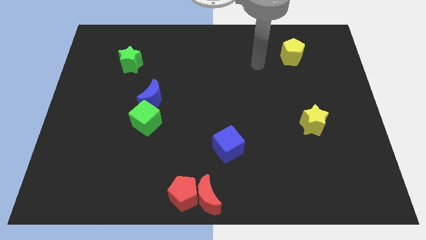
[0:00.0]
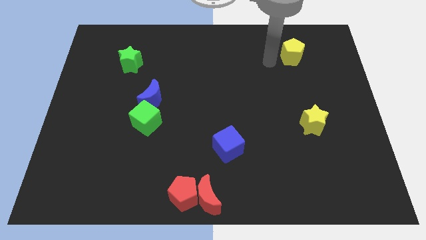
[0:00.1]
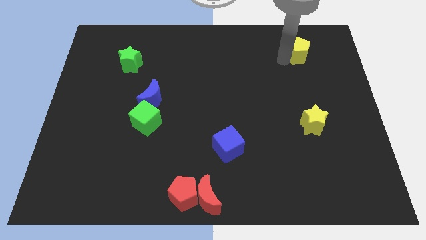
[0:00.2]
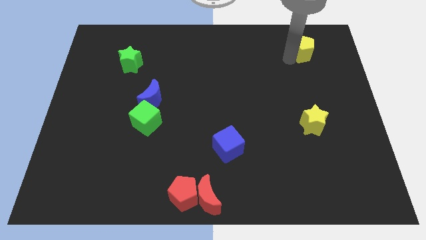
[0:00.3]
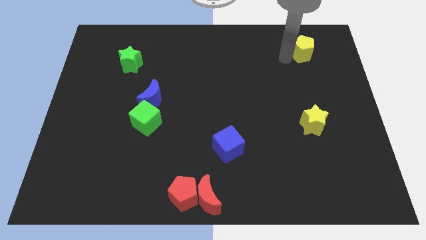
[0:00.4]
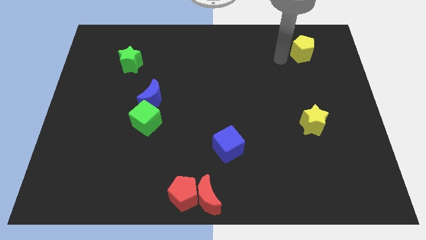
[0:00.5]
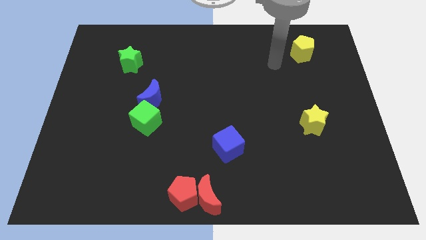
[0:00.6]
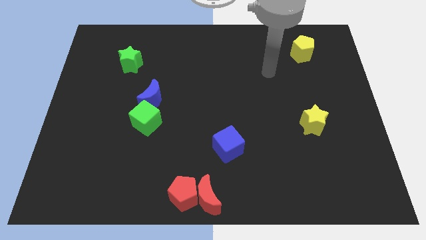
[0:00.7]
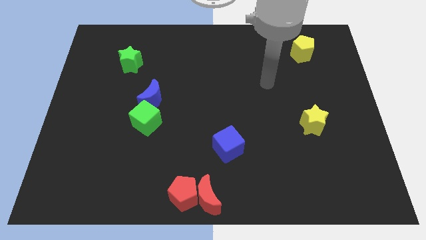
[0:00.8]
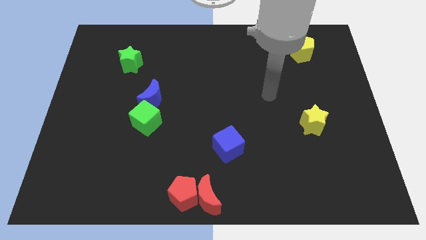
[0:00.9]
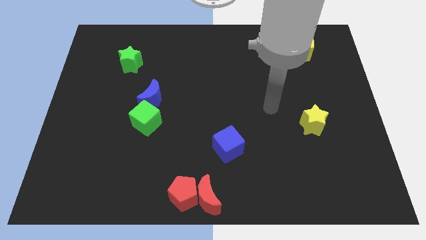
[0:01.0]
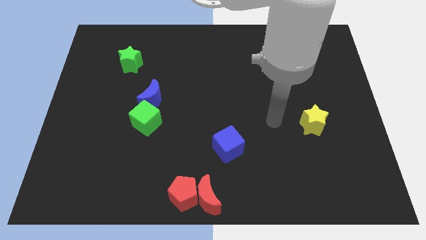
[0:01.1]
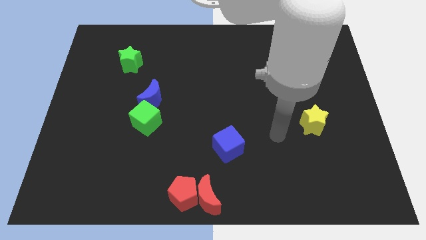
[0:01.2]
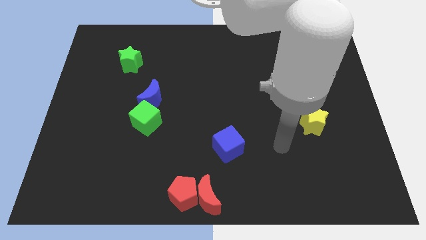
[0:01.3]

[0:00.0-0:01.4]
place the arm towards the left side of the yellow star

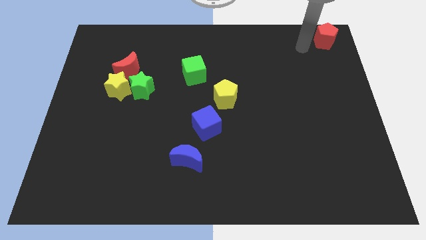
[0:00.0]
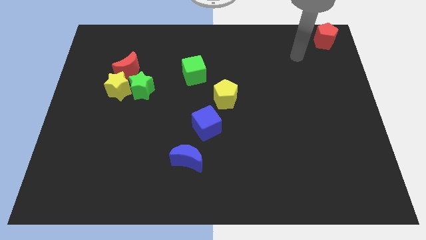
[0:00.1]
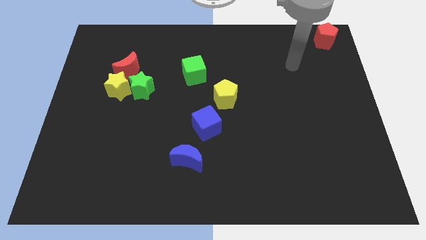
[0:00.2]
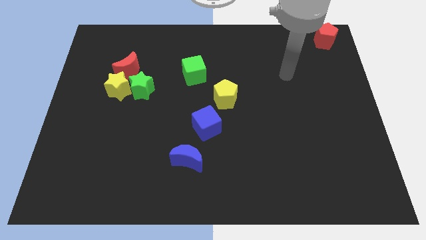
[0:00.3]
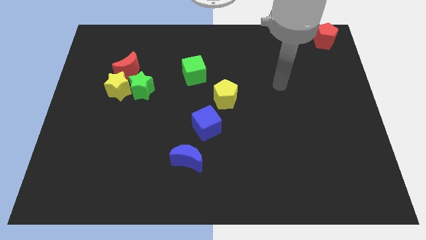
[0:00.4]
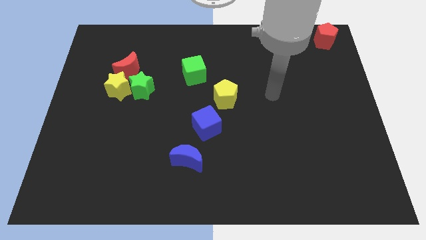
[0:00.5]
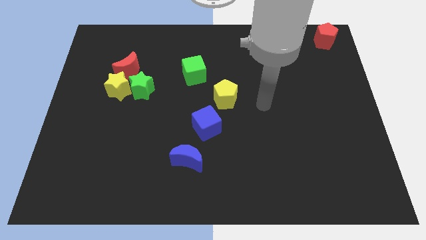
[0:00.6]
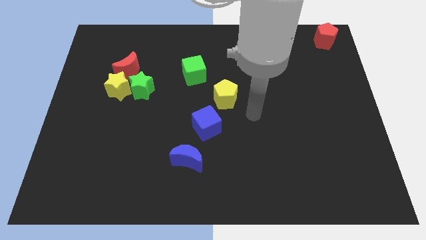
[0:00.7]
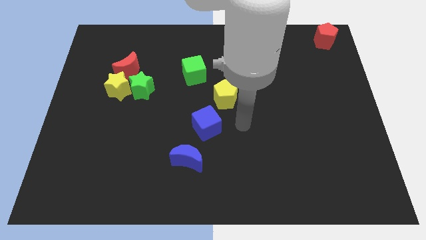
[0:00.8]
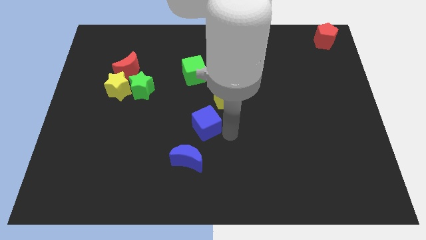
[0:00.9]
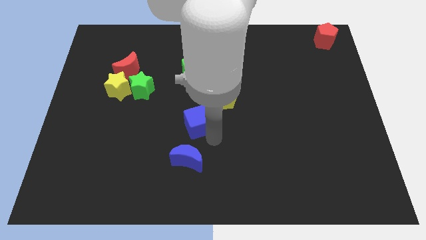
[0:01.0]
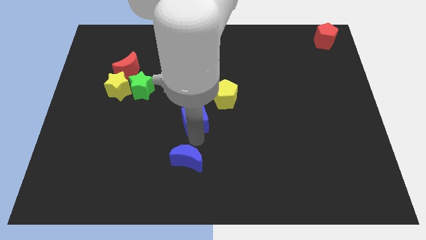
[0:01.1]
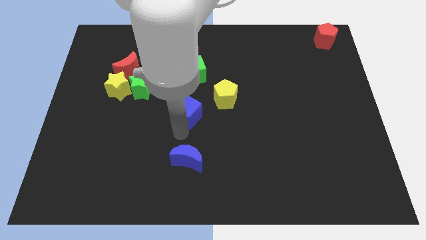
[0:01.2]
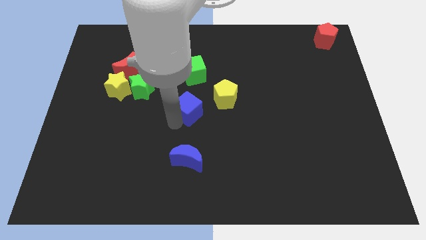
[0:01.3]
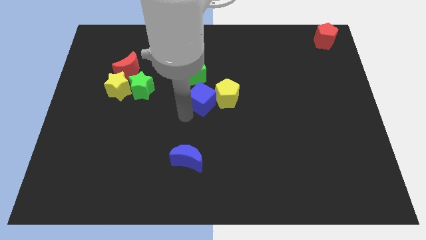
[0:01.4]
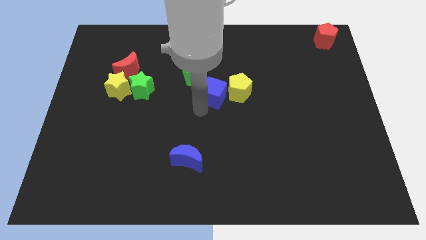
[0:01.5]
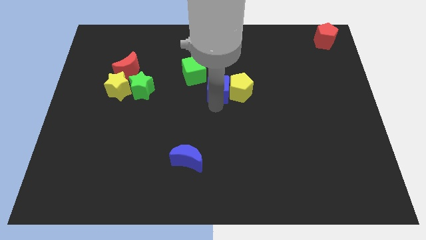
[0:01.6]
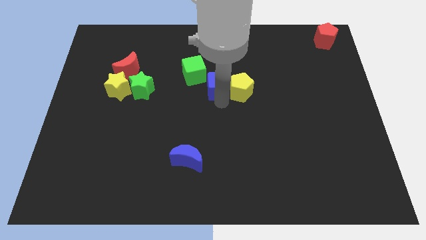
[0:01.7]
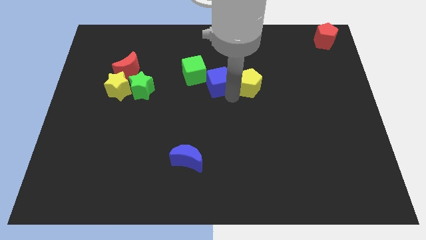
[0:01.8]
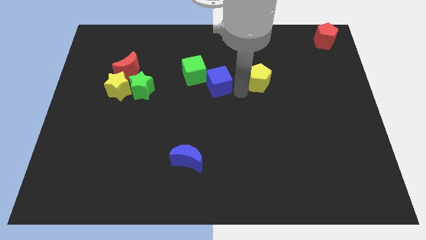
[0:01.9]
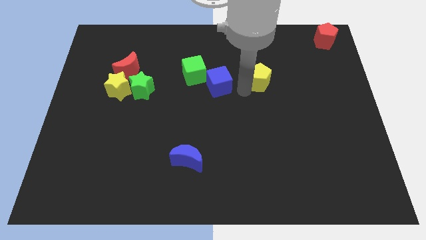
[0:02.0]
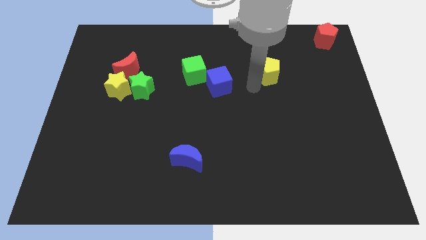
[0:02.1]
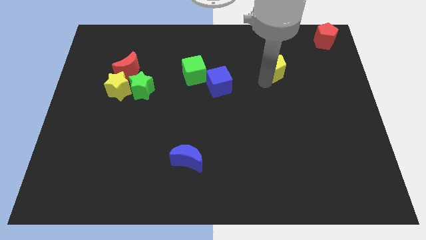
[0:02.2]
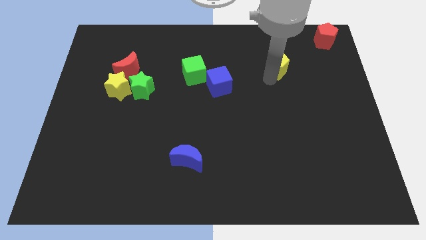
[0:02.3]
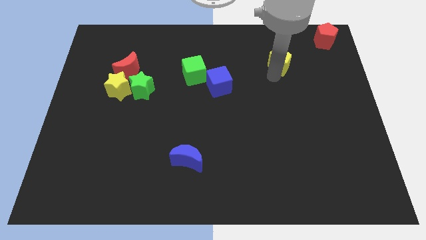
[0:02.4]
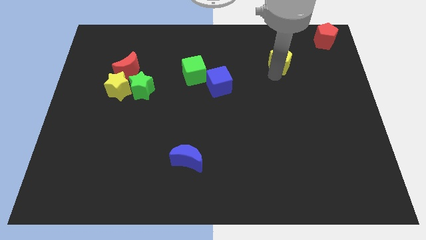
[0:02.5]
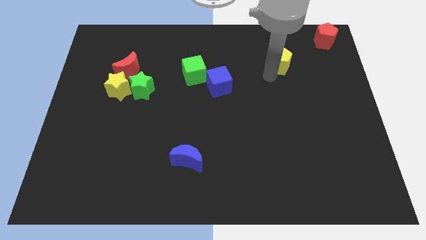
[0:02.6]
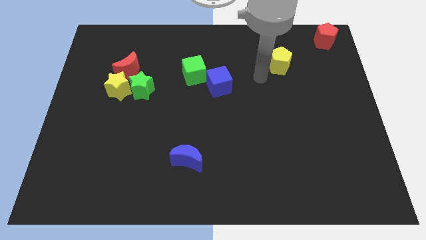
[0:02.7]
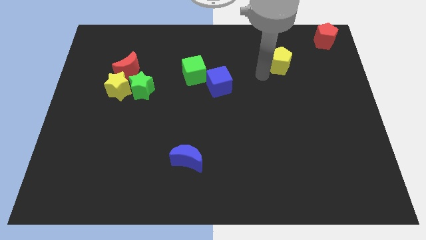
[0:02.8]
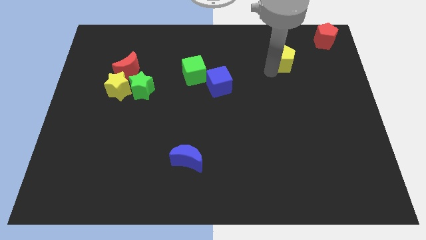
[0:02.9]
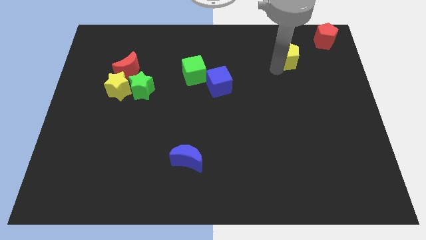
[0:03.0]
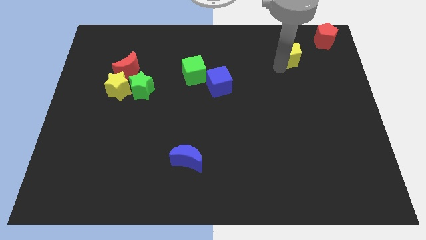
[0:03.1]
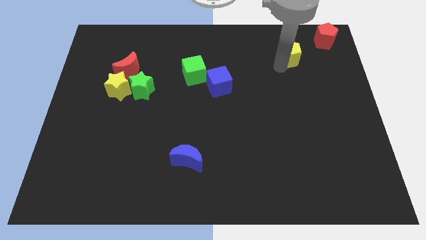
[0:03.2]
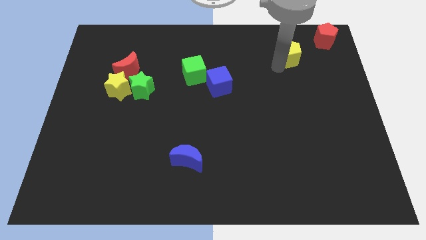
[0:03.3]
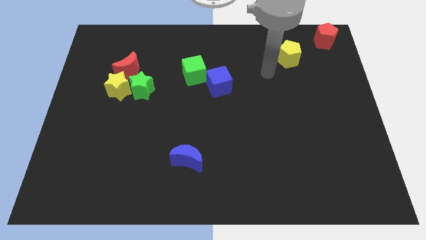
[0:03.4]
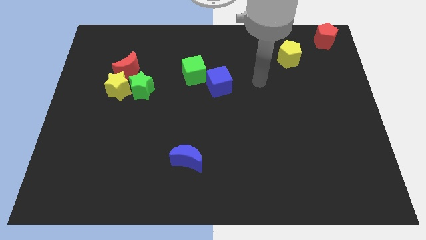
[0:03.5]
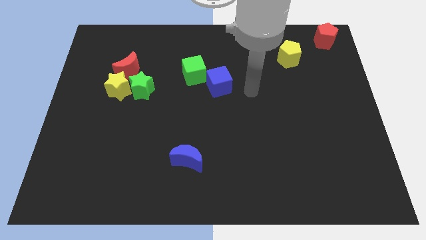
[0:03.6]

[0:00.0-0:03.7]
push the yellow pentagon diagonally to the top right of the blue cube

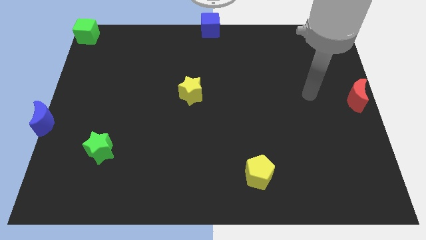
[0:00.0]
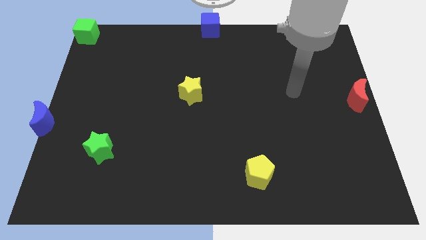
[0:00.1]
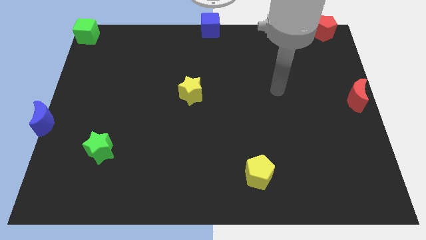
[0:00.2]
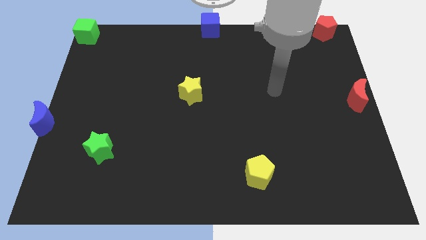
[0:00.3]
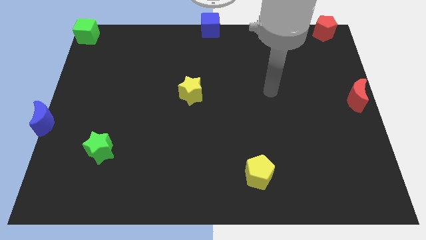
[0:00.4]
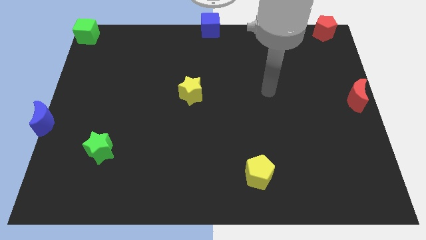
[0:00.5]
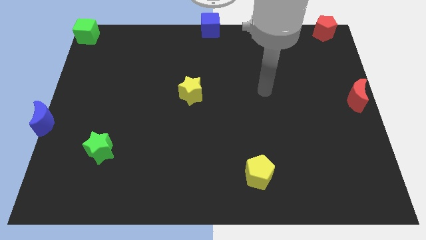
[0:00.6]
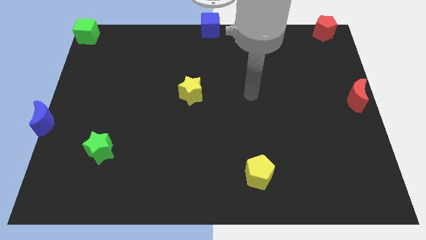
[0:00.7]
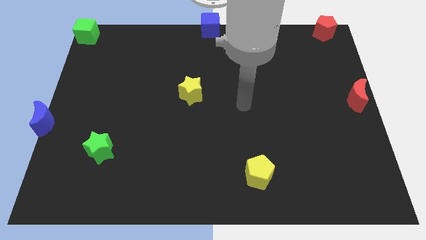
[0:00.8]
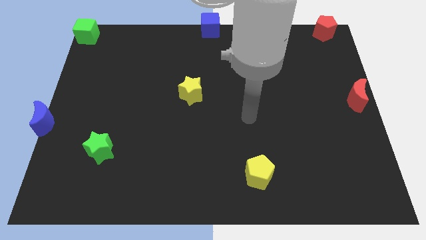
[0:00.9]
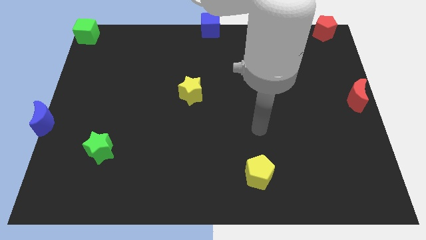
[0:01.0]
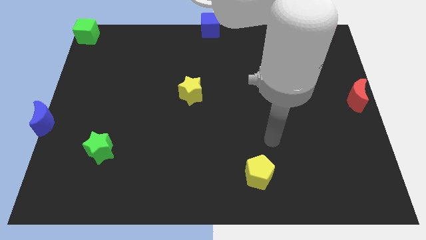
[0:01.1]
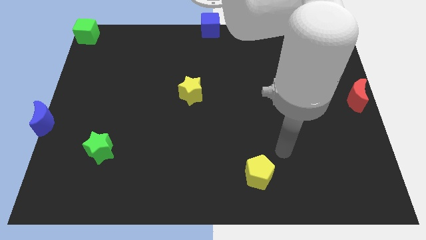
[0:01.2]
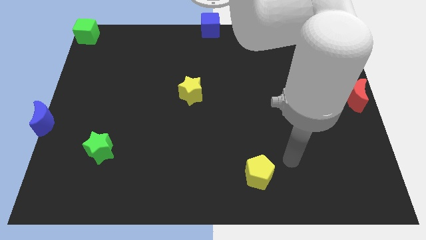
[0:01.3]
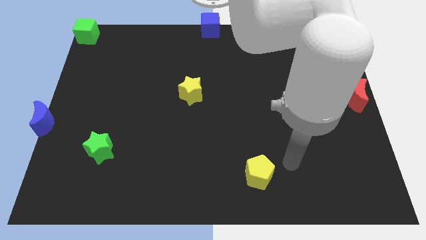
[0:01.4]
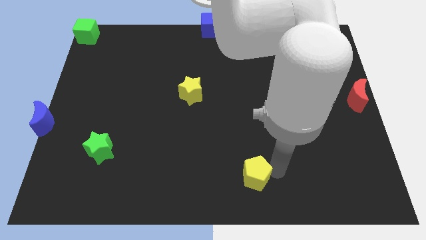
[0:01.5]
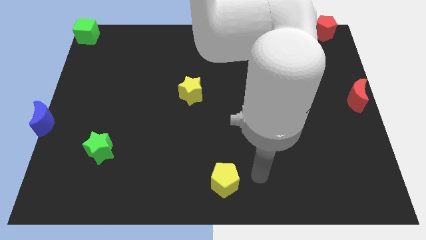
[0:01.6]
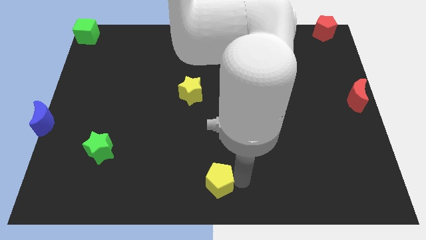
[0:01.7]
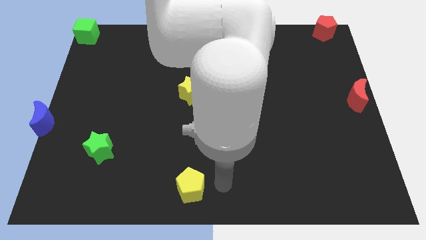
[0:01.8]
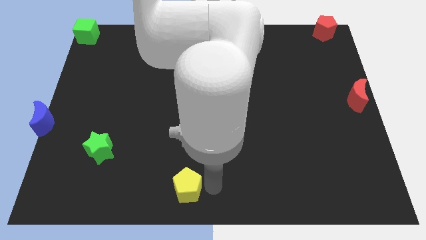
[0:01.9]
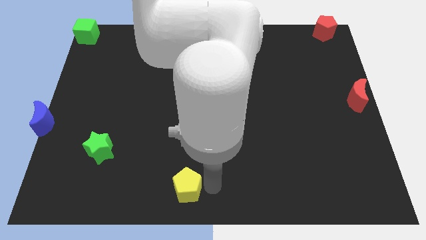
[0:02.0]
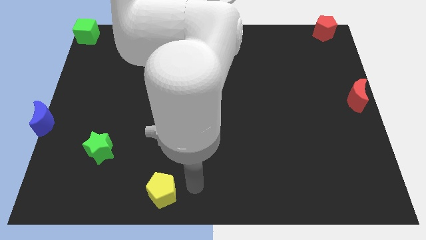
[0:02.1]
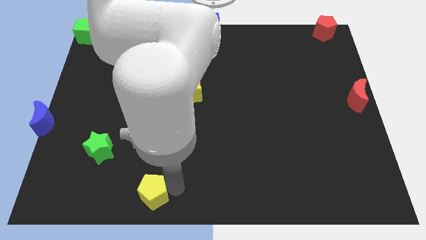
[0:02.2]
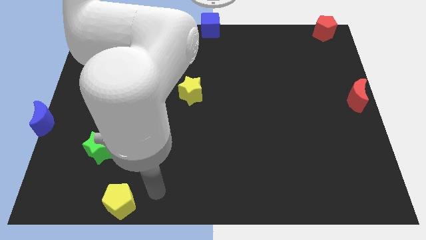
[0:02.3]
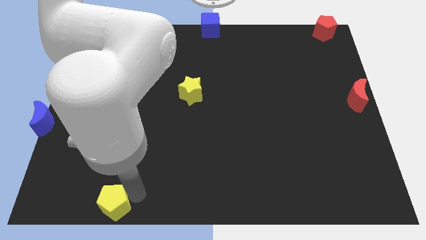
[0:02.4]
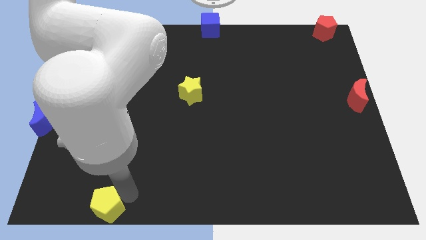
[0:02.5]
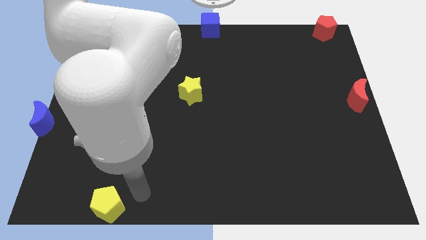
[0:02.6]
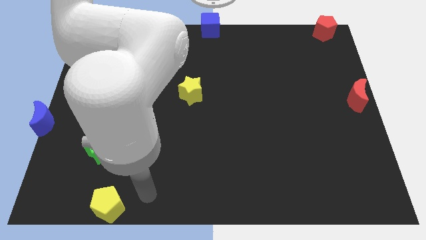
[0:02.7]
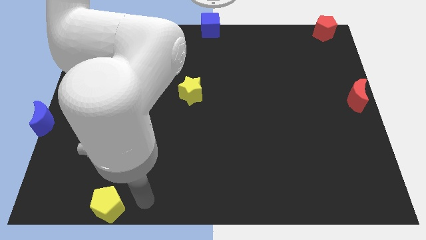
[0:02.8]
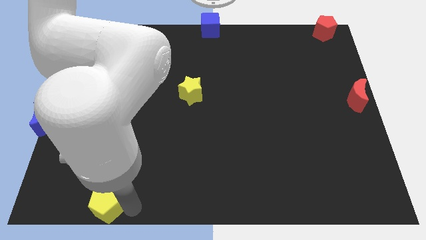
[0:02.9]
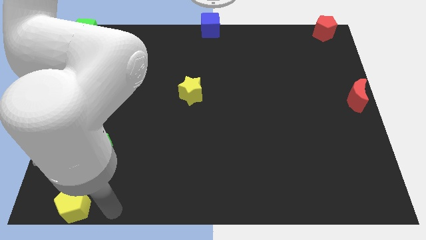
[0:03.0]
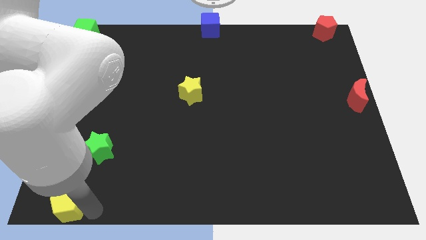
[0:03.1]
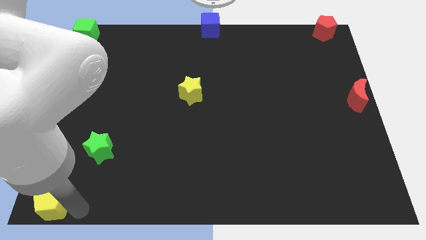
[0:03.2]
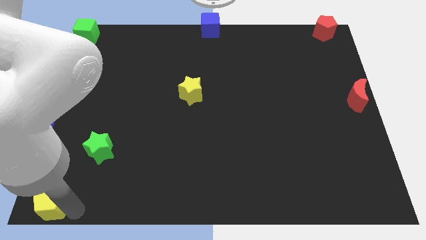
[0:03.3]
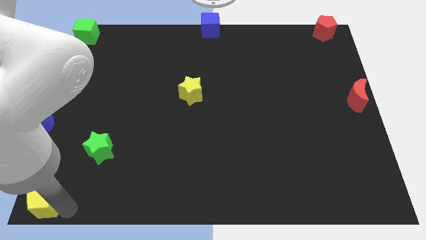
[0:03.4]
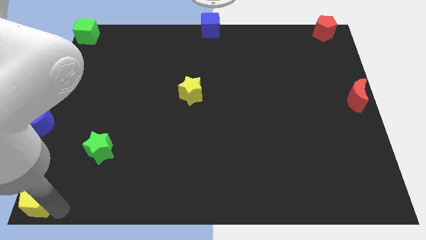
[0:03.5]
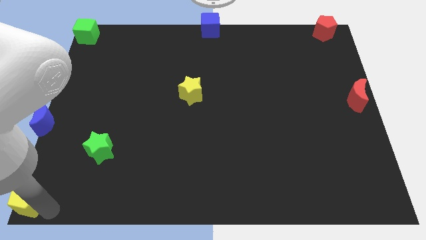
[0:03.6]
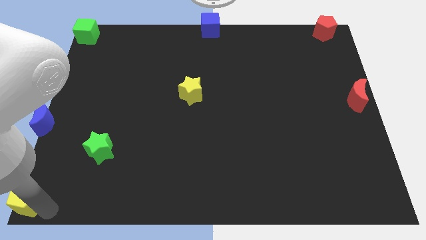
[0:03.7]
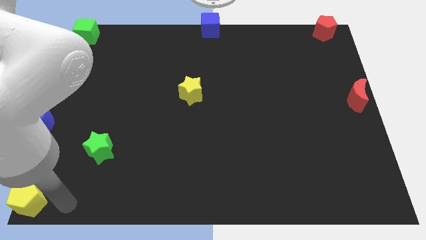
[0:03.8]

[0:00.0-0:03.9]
push the yellow pentagon towards the bottom left corner of the board

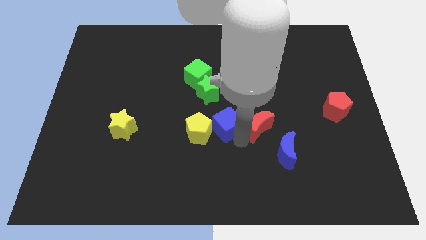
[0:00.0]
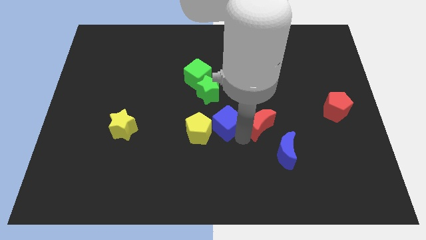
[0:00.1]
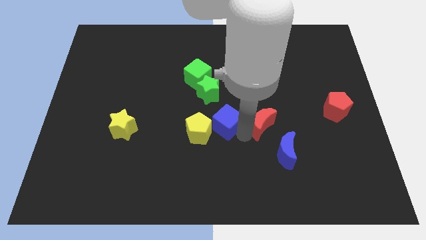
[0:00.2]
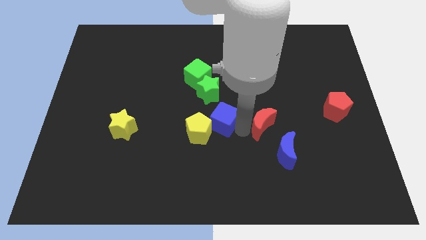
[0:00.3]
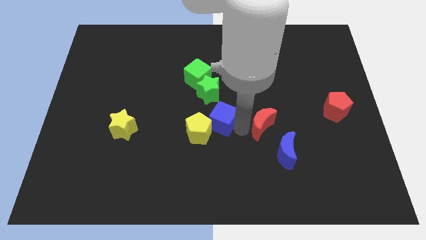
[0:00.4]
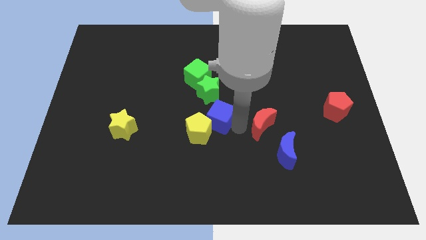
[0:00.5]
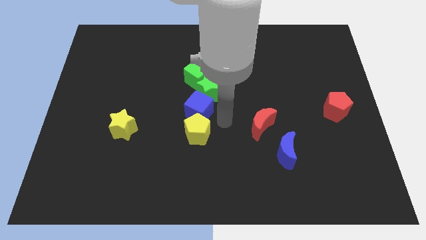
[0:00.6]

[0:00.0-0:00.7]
place the blue cube above the yellow pentagon
